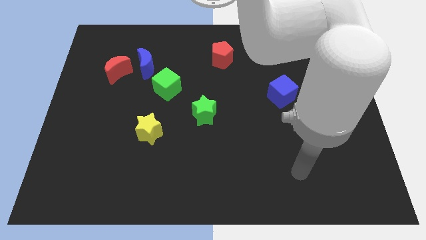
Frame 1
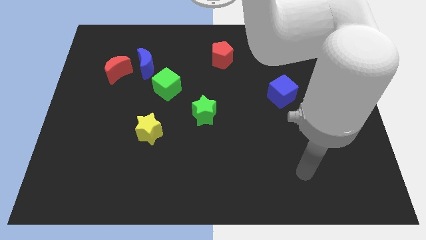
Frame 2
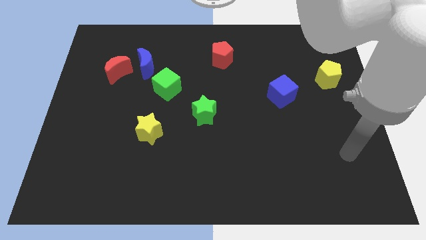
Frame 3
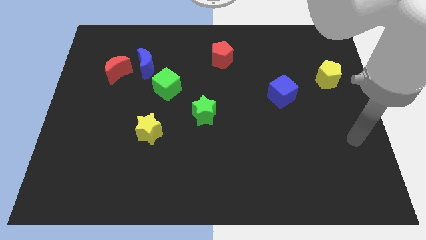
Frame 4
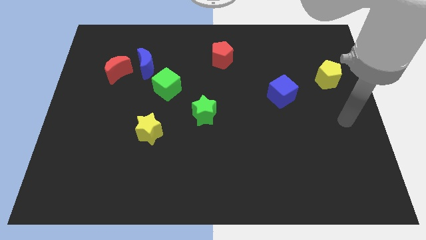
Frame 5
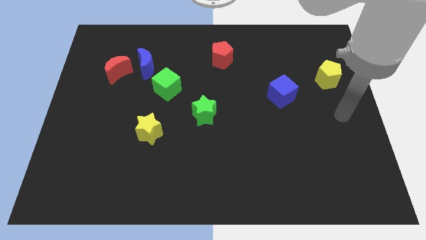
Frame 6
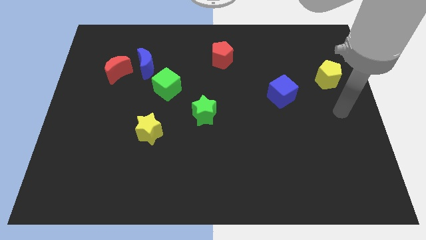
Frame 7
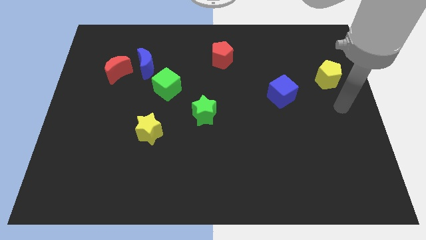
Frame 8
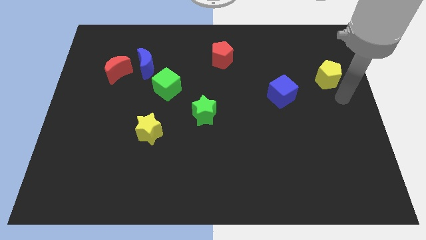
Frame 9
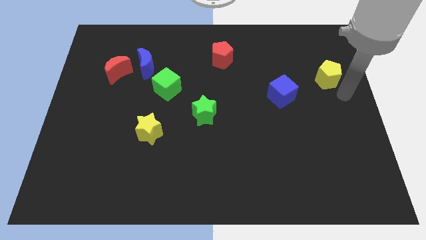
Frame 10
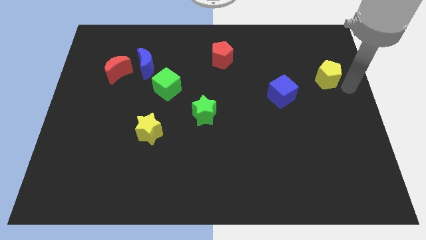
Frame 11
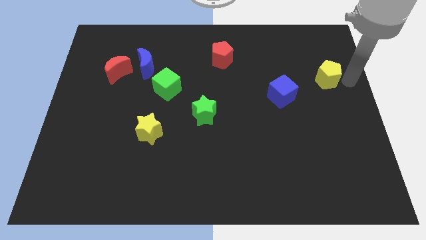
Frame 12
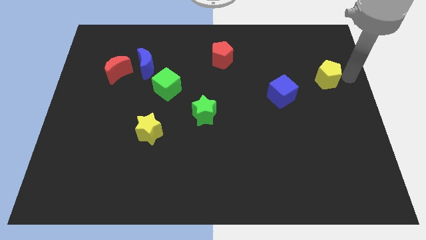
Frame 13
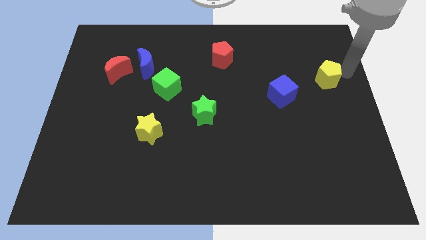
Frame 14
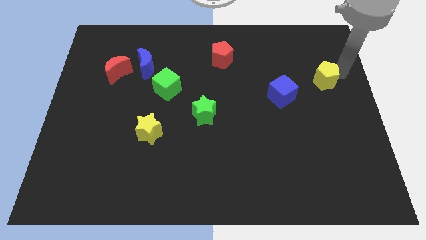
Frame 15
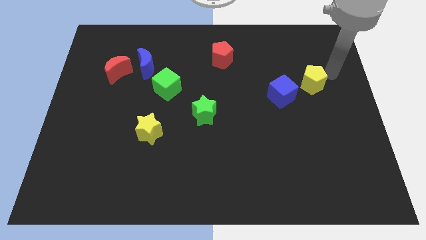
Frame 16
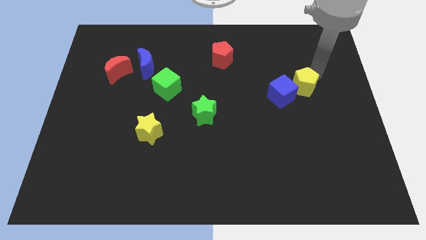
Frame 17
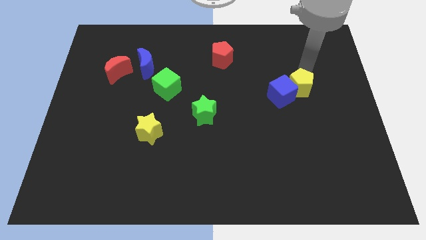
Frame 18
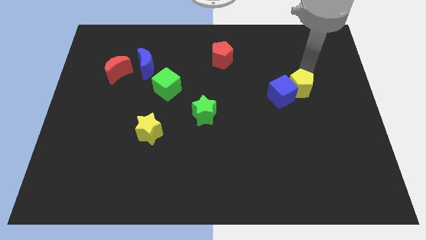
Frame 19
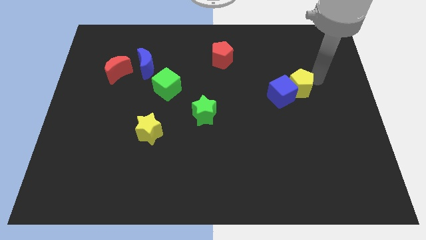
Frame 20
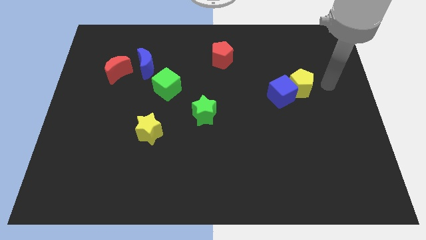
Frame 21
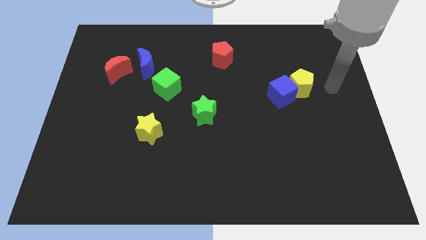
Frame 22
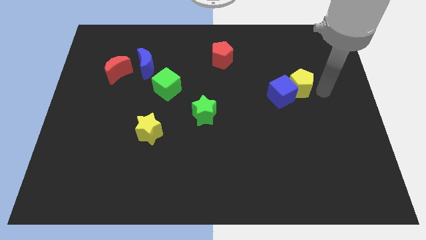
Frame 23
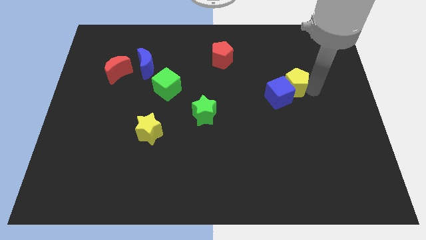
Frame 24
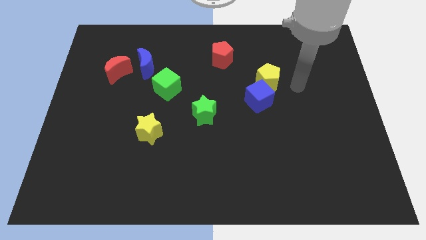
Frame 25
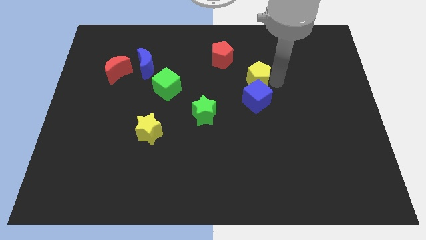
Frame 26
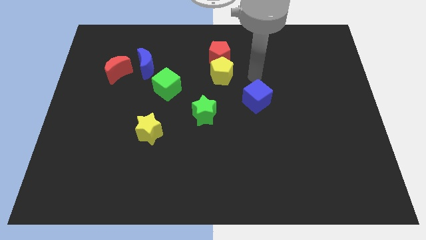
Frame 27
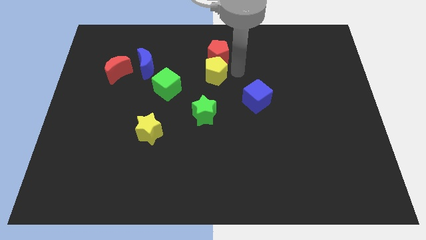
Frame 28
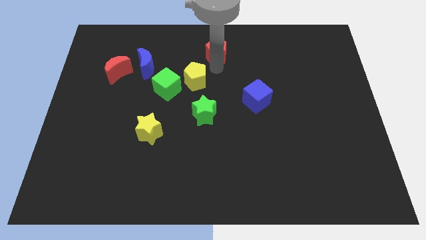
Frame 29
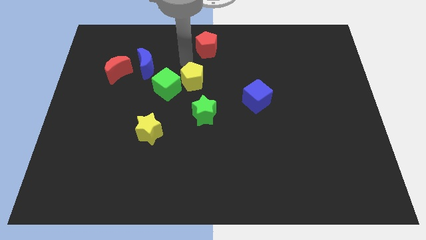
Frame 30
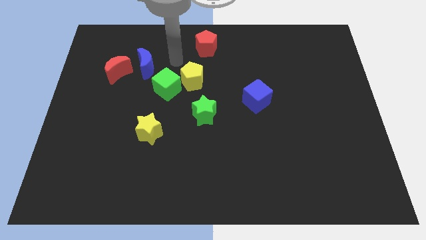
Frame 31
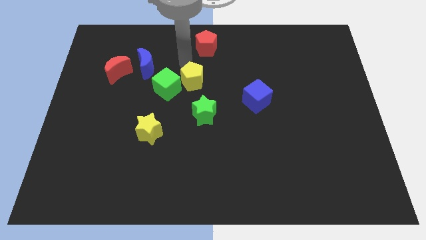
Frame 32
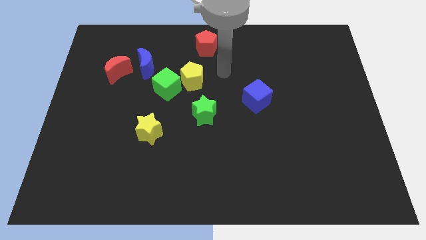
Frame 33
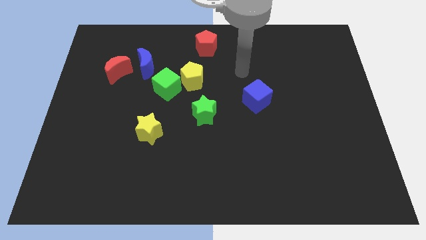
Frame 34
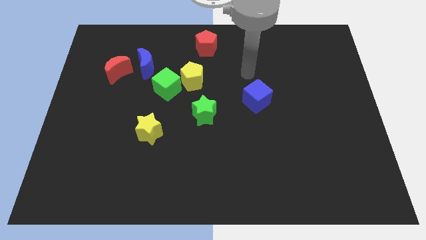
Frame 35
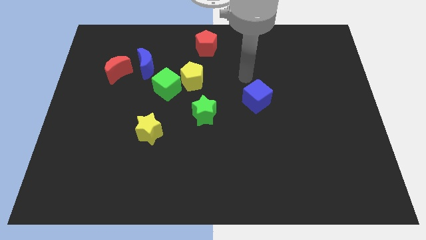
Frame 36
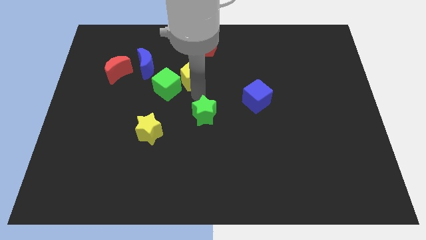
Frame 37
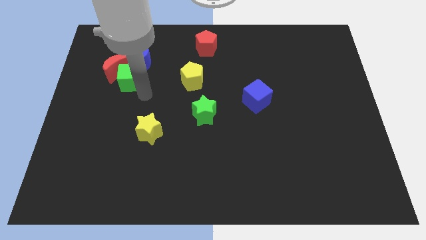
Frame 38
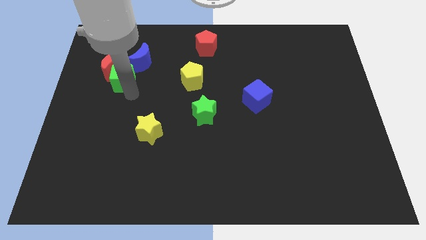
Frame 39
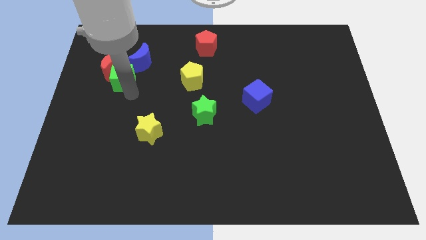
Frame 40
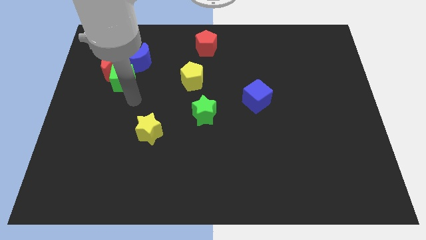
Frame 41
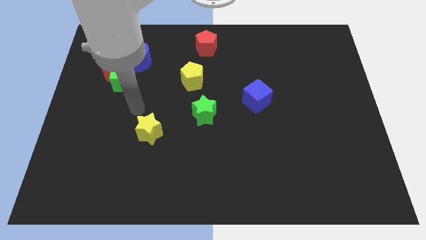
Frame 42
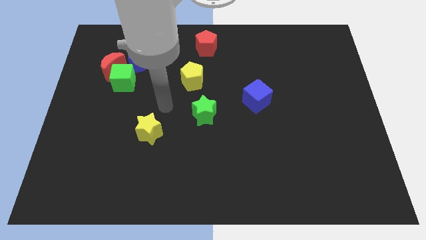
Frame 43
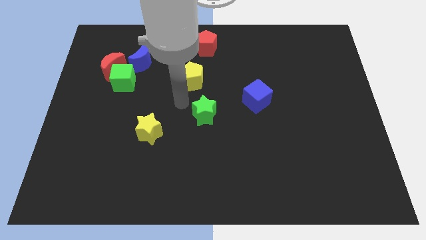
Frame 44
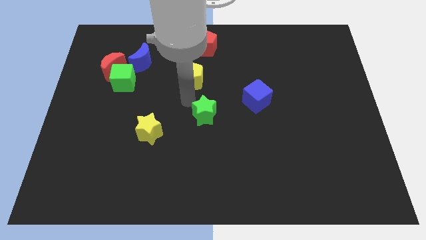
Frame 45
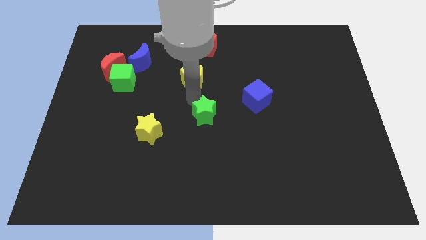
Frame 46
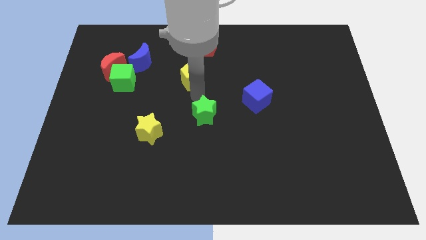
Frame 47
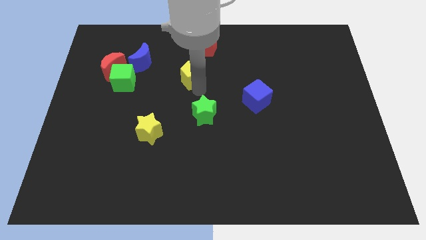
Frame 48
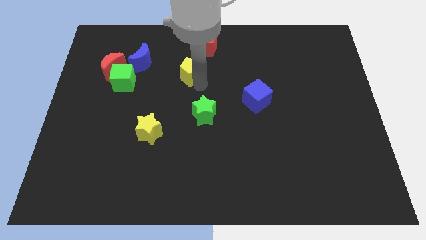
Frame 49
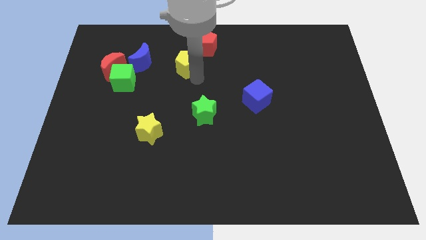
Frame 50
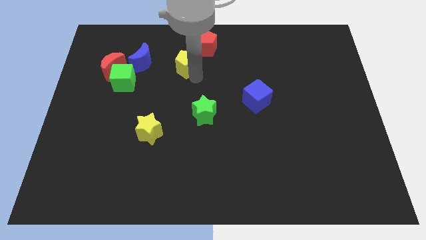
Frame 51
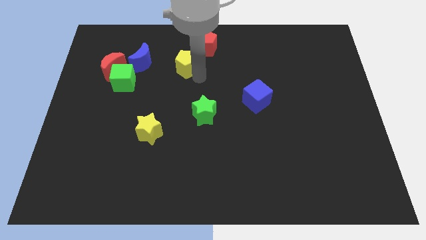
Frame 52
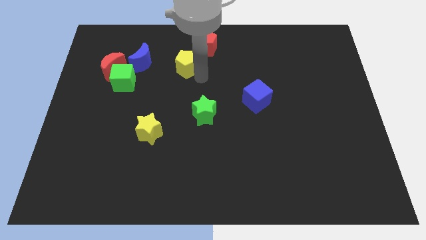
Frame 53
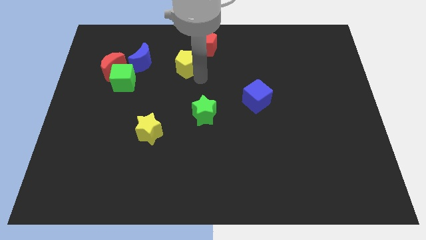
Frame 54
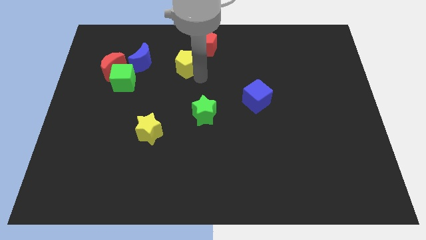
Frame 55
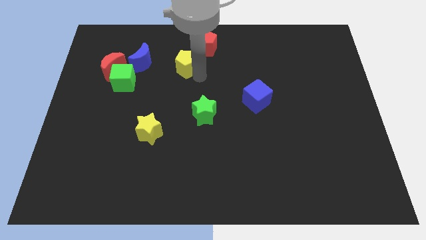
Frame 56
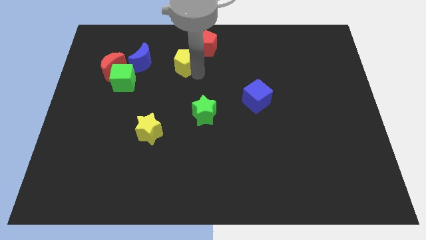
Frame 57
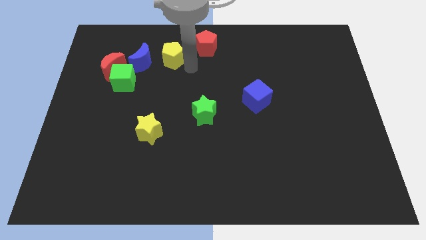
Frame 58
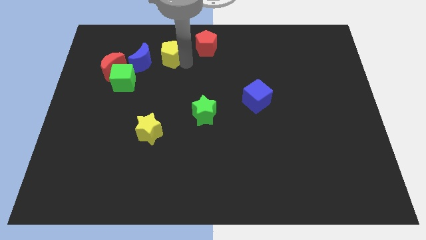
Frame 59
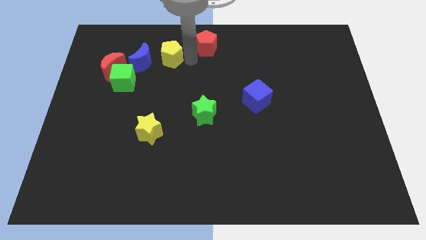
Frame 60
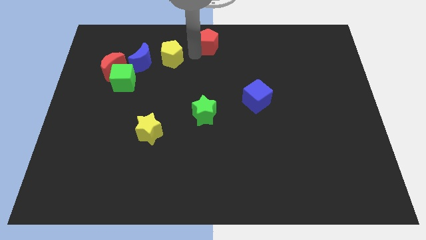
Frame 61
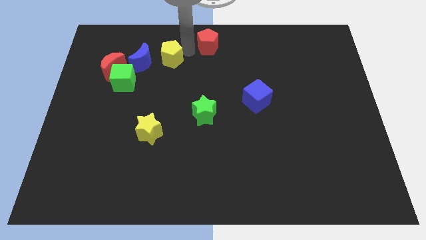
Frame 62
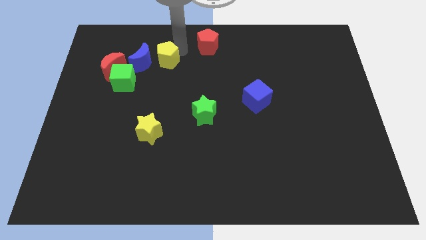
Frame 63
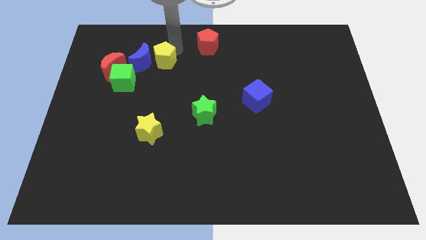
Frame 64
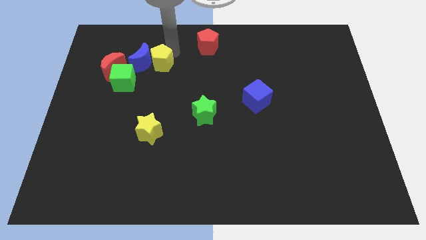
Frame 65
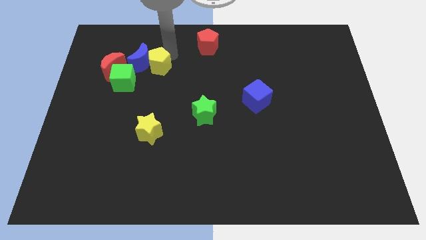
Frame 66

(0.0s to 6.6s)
put the yellow pentagon close to the blue moon

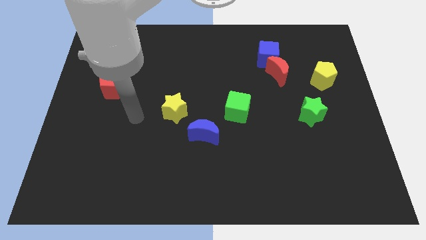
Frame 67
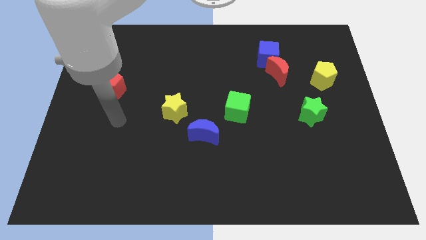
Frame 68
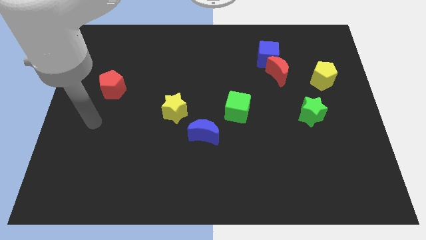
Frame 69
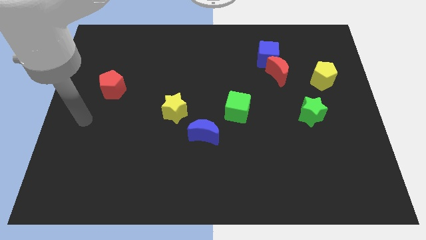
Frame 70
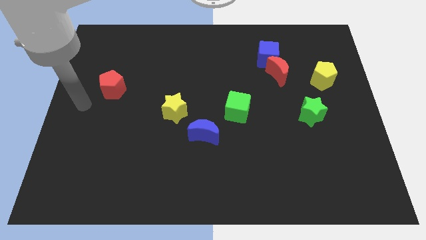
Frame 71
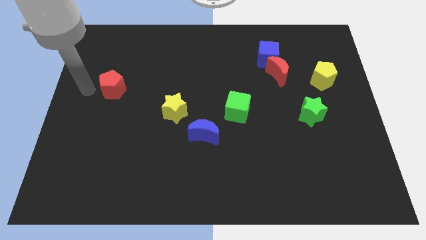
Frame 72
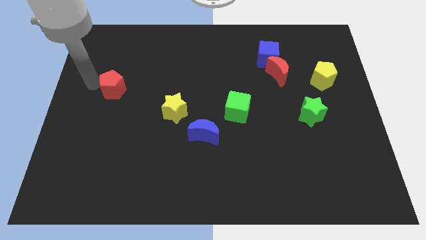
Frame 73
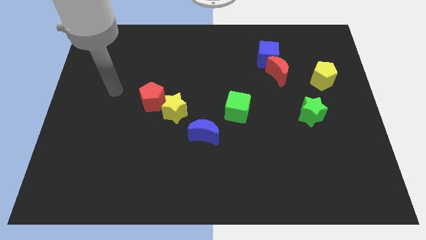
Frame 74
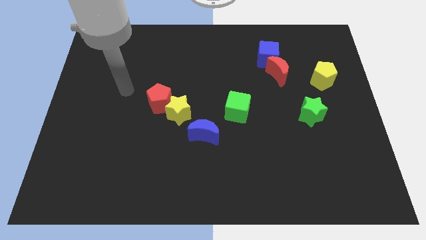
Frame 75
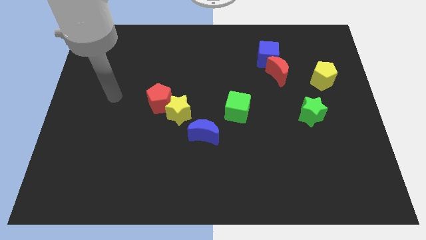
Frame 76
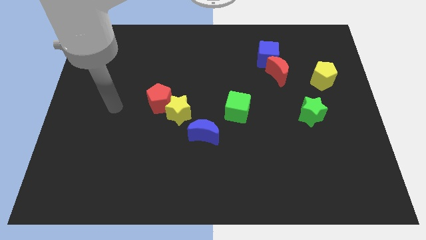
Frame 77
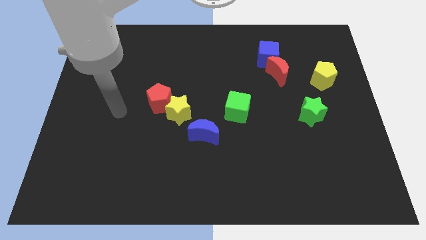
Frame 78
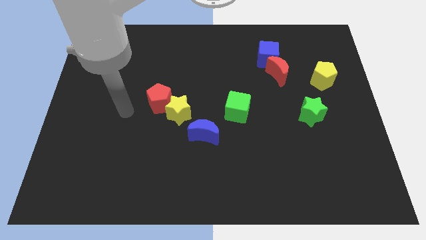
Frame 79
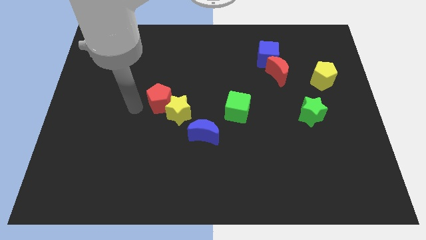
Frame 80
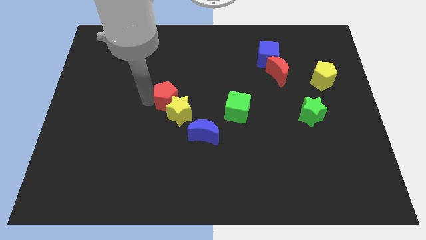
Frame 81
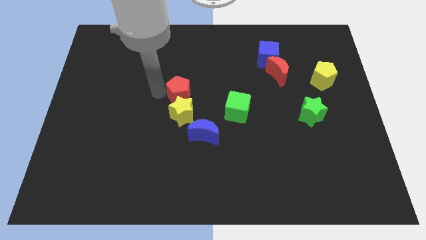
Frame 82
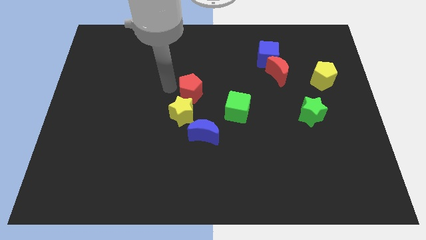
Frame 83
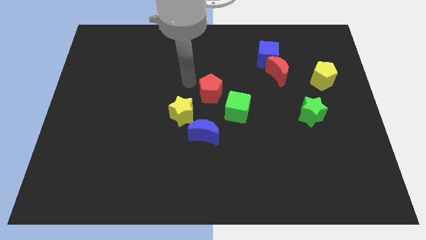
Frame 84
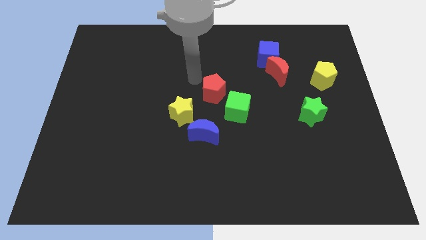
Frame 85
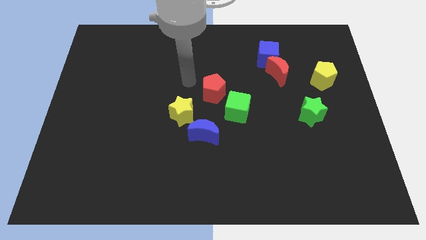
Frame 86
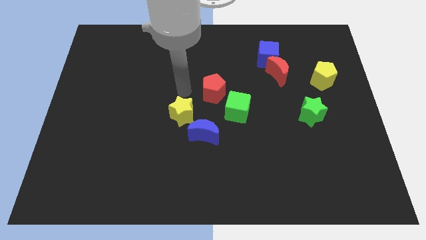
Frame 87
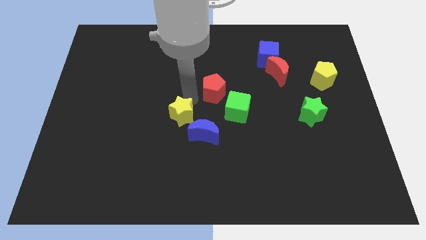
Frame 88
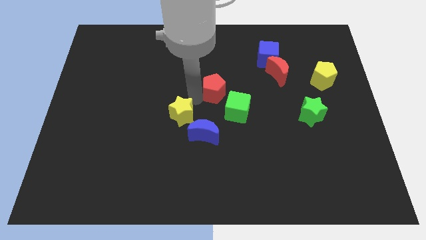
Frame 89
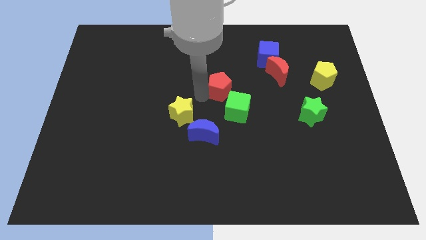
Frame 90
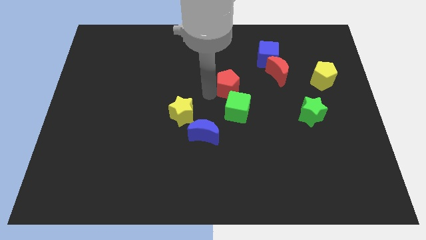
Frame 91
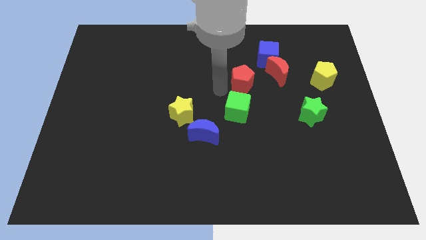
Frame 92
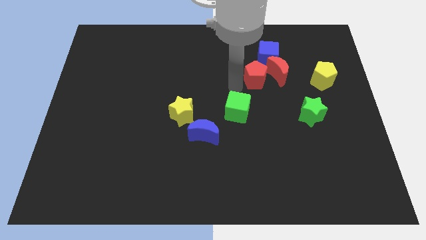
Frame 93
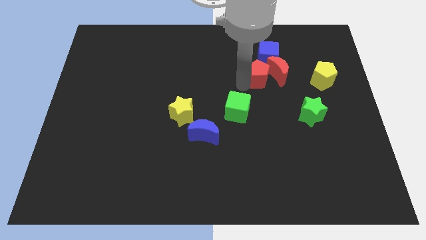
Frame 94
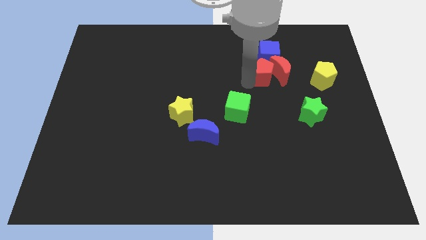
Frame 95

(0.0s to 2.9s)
slide the red pentagon next to the red moon
